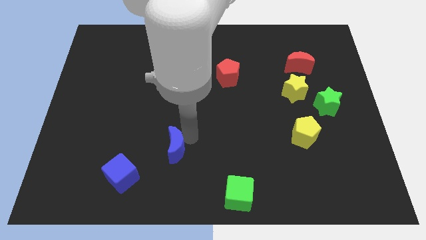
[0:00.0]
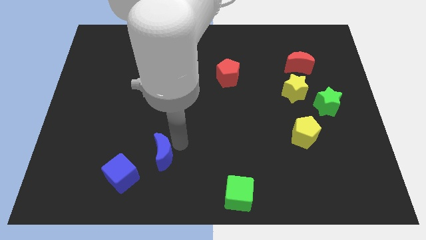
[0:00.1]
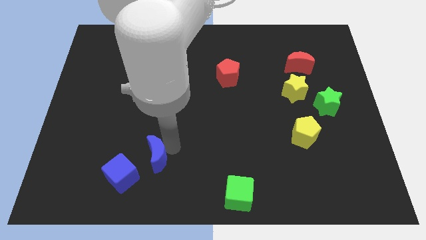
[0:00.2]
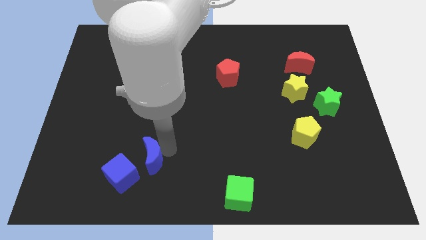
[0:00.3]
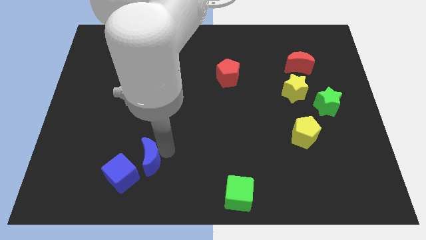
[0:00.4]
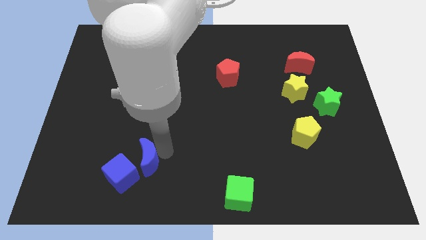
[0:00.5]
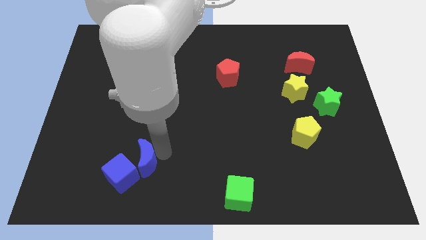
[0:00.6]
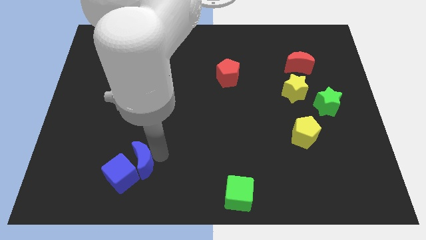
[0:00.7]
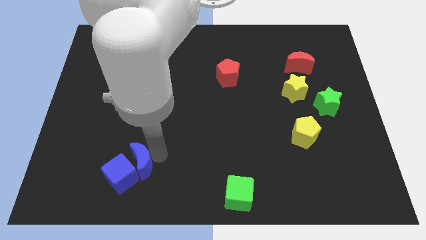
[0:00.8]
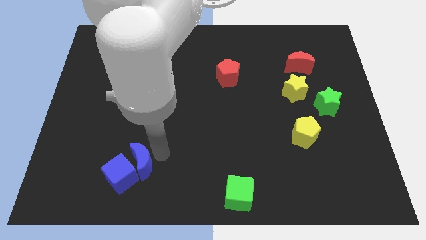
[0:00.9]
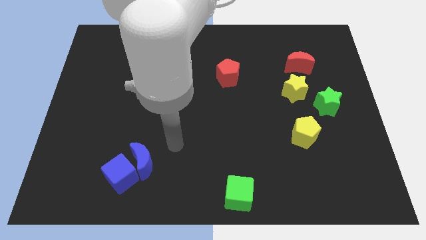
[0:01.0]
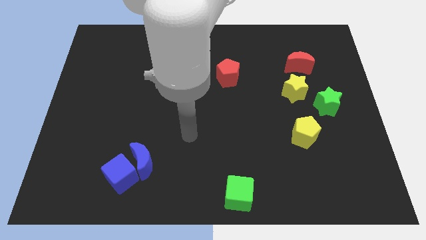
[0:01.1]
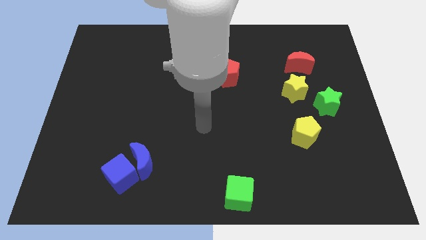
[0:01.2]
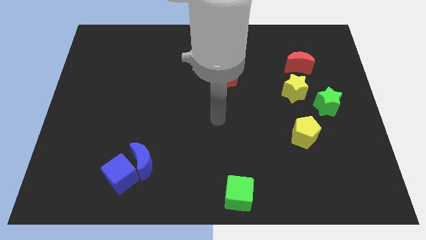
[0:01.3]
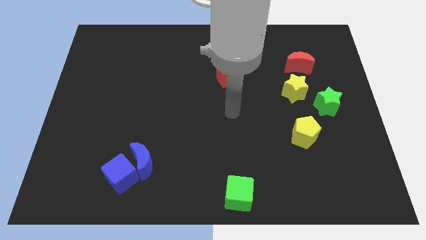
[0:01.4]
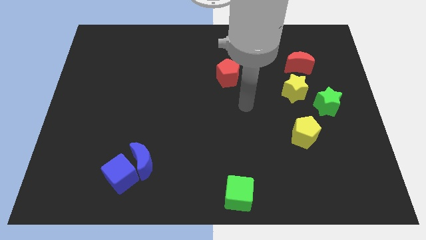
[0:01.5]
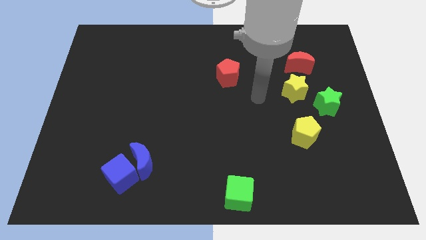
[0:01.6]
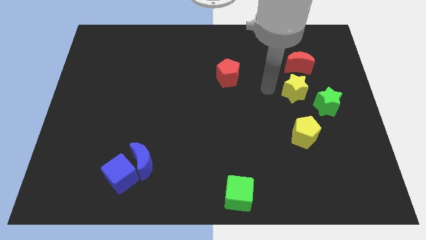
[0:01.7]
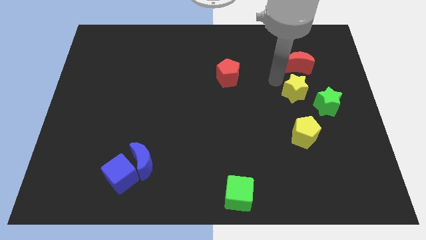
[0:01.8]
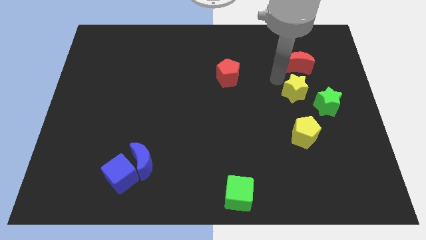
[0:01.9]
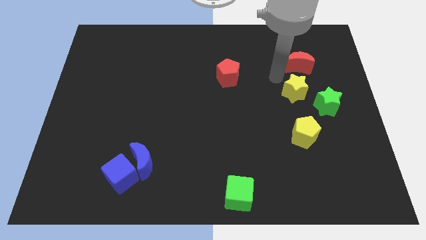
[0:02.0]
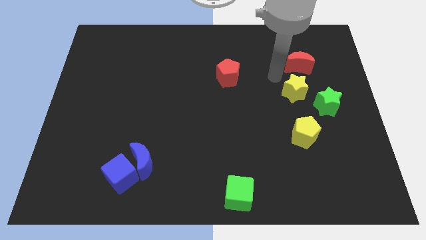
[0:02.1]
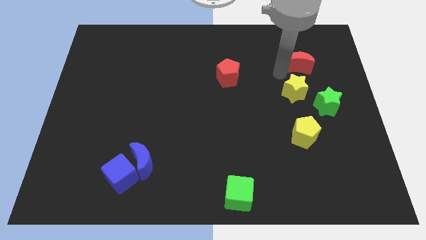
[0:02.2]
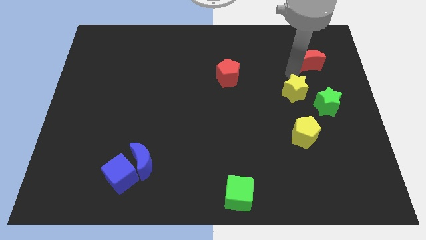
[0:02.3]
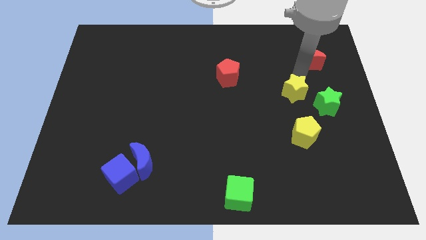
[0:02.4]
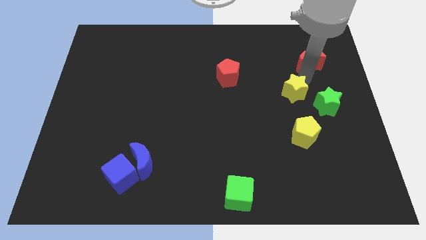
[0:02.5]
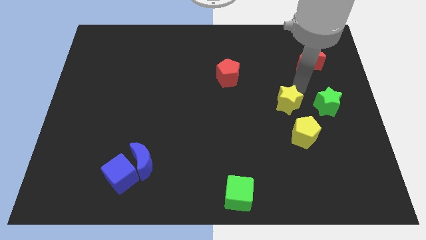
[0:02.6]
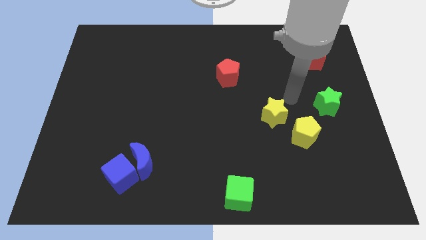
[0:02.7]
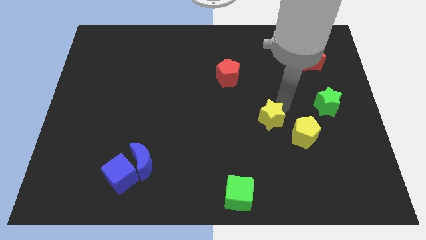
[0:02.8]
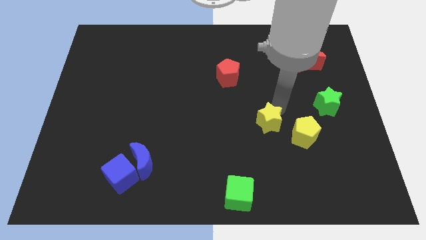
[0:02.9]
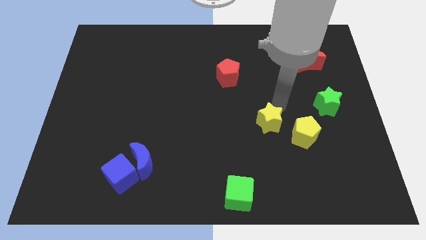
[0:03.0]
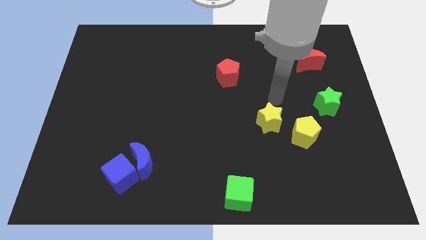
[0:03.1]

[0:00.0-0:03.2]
move the blue moon slightly to the right

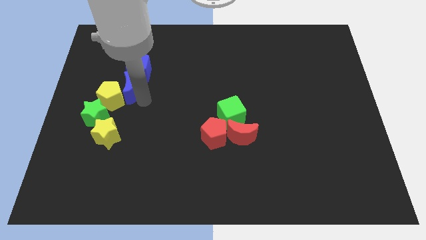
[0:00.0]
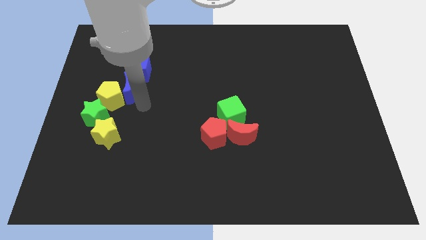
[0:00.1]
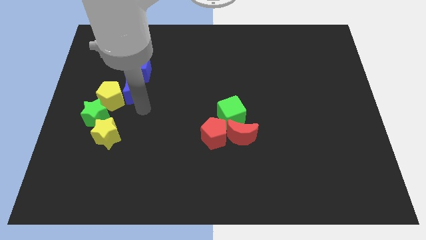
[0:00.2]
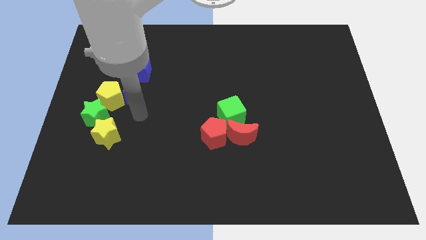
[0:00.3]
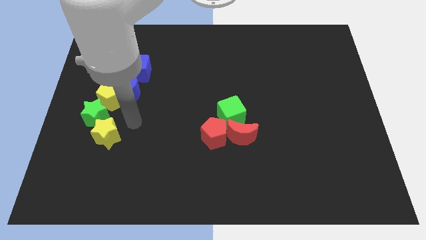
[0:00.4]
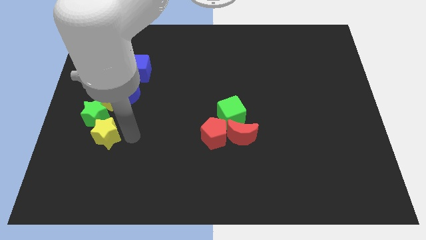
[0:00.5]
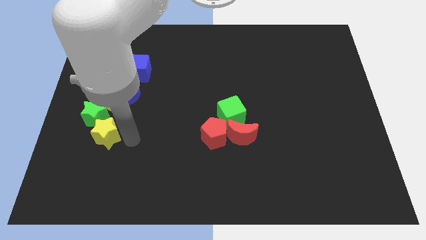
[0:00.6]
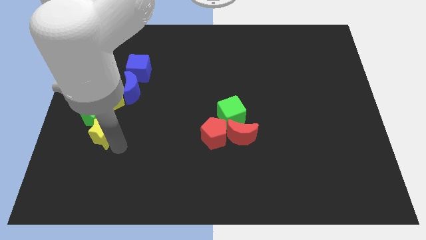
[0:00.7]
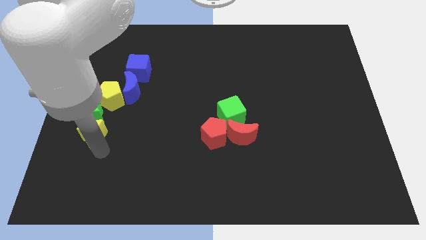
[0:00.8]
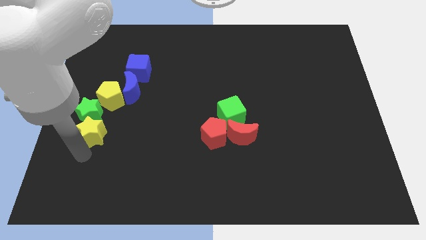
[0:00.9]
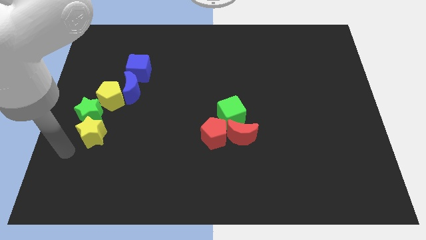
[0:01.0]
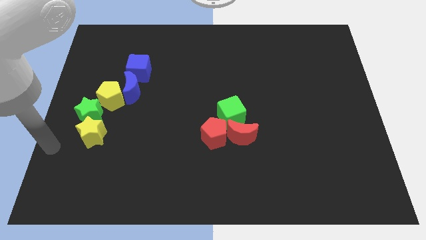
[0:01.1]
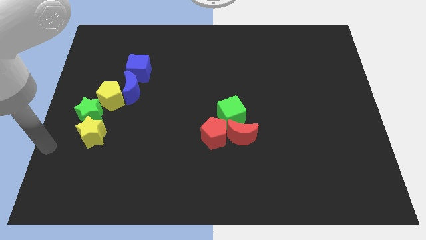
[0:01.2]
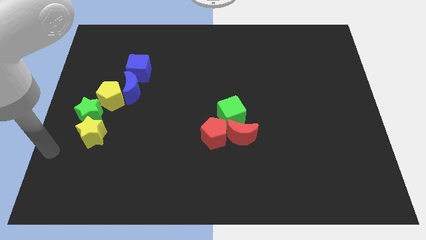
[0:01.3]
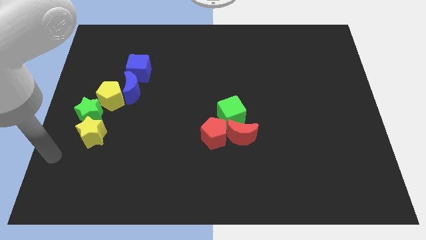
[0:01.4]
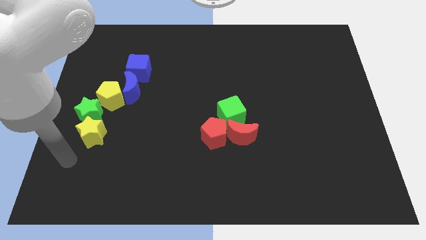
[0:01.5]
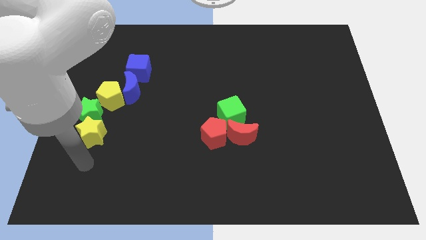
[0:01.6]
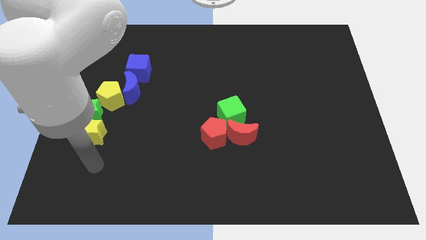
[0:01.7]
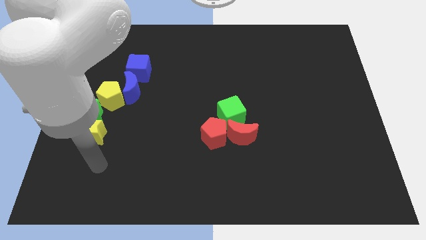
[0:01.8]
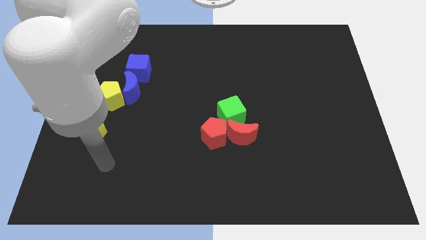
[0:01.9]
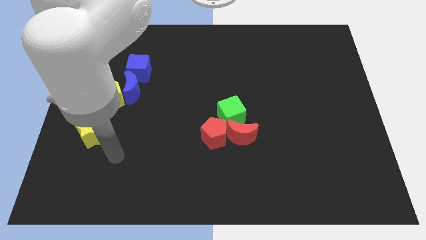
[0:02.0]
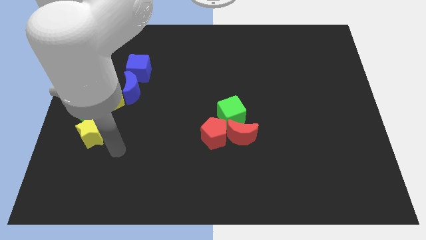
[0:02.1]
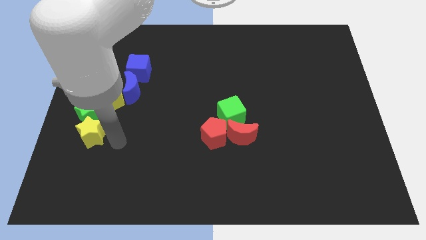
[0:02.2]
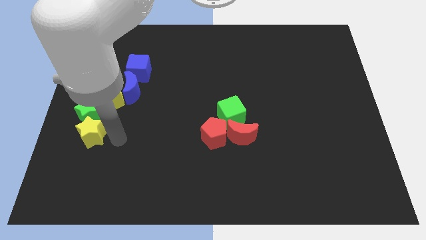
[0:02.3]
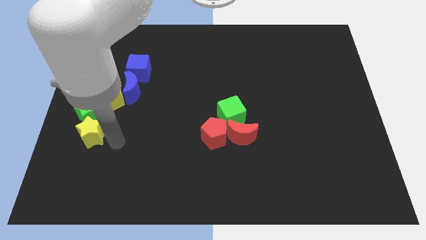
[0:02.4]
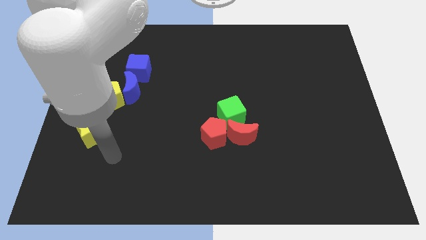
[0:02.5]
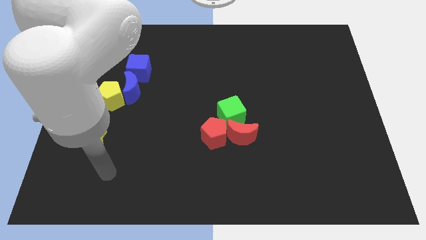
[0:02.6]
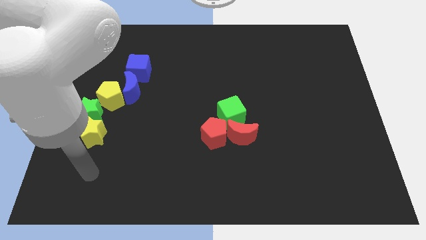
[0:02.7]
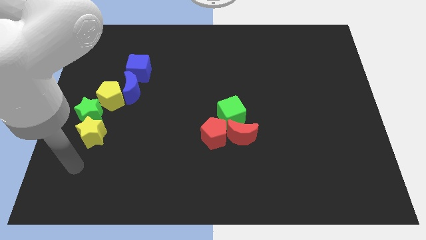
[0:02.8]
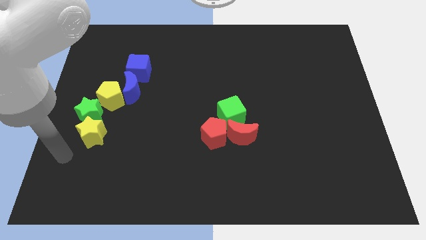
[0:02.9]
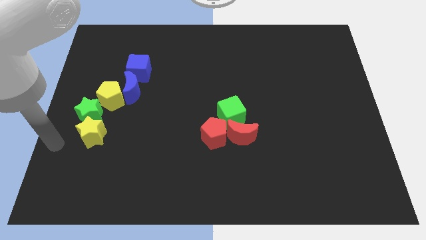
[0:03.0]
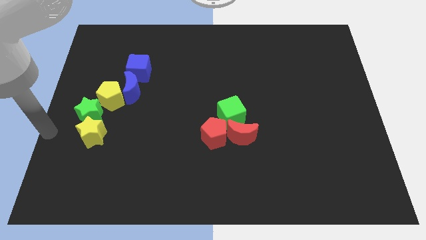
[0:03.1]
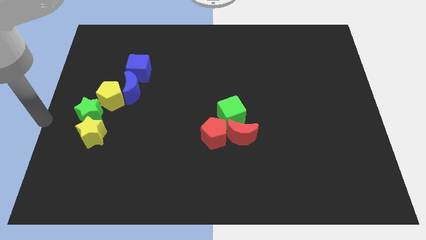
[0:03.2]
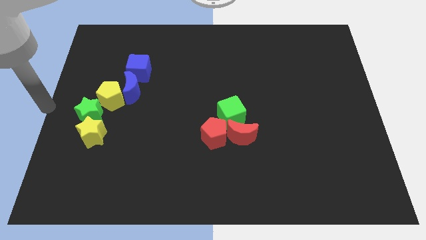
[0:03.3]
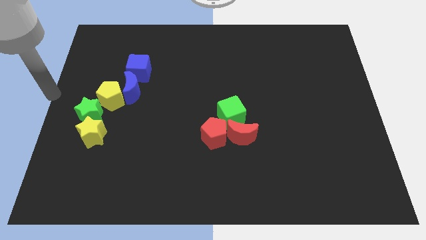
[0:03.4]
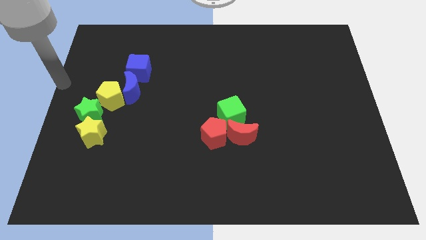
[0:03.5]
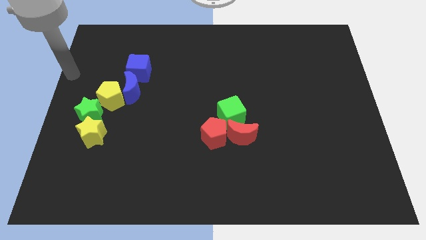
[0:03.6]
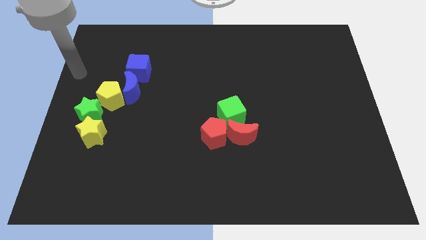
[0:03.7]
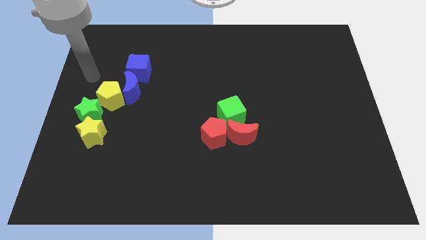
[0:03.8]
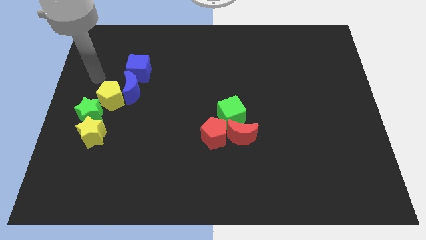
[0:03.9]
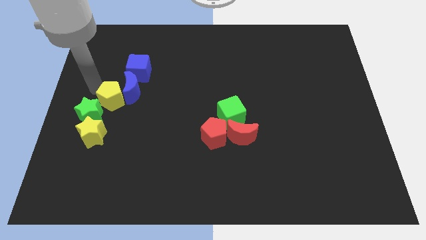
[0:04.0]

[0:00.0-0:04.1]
move your arm to the top left of the yellow pentagon

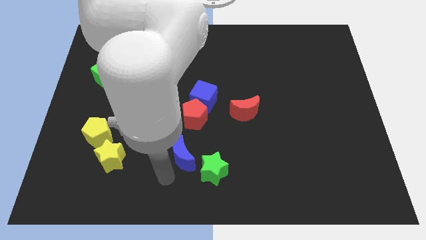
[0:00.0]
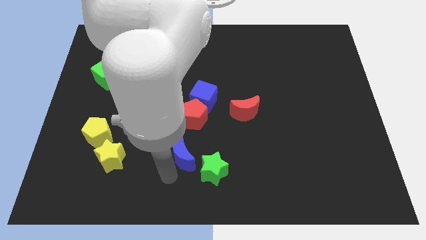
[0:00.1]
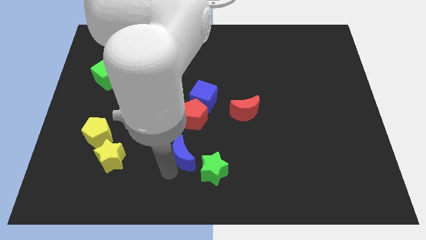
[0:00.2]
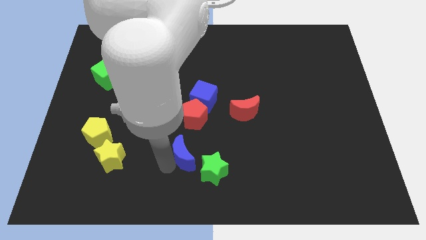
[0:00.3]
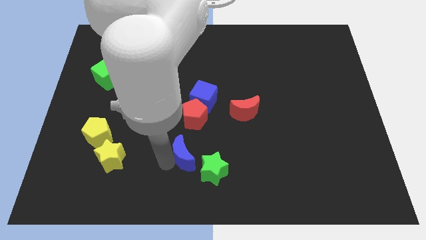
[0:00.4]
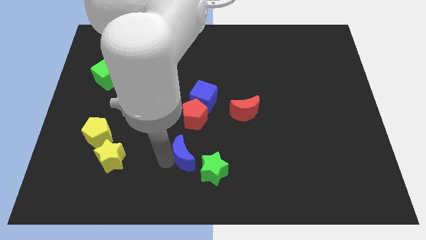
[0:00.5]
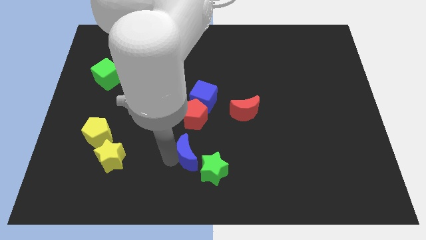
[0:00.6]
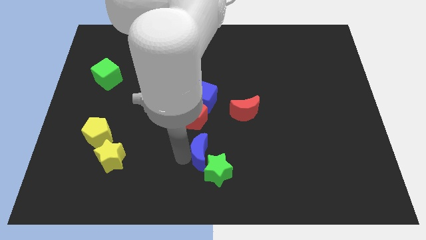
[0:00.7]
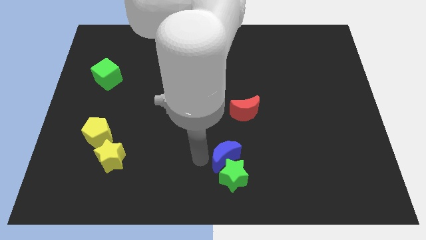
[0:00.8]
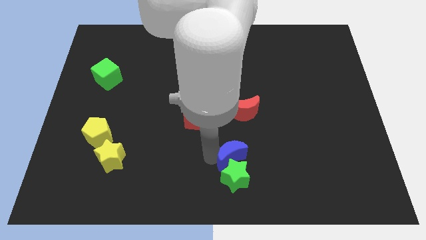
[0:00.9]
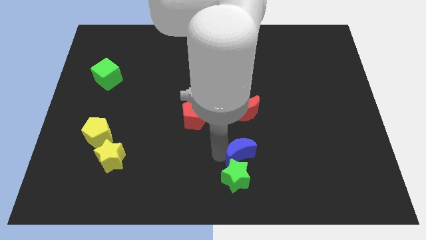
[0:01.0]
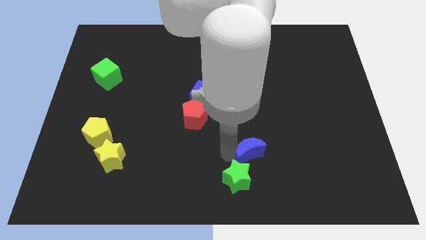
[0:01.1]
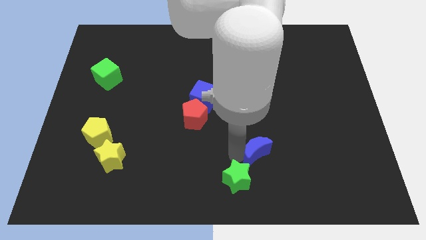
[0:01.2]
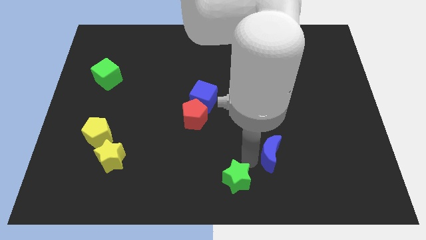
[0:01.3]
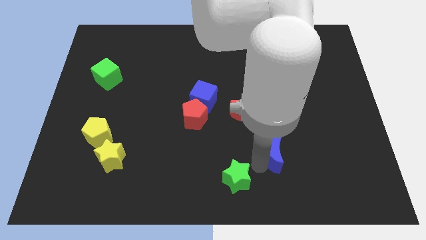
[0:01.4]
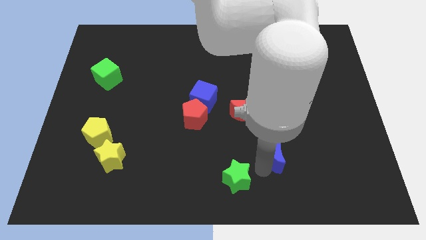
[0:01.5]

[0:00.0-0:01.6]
push the blue moon to the right side

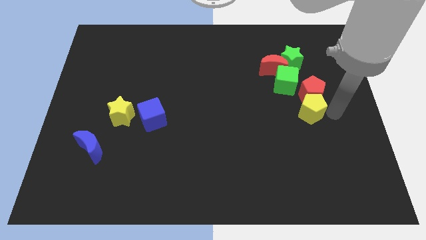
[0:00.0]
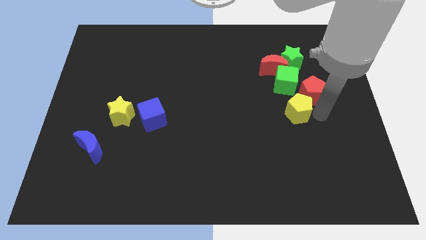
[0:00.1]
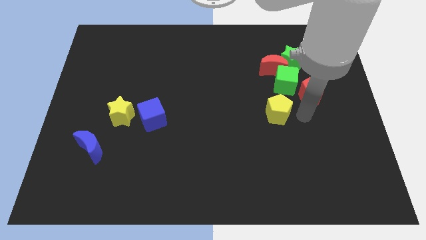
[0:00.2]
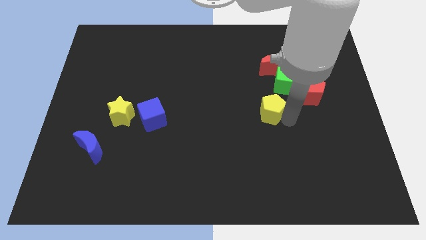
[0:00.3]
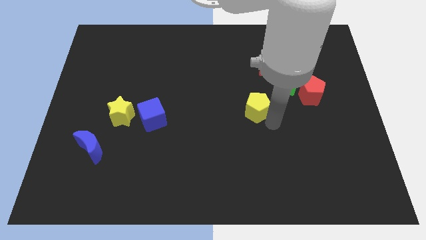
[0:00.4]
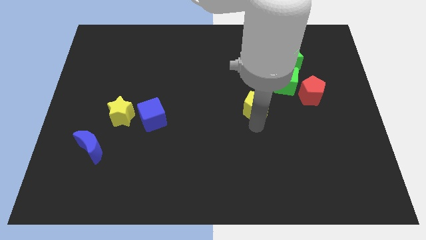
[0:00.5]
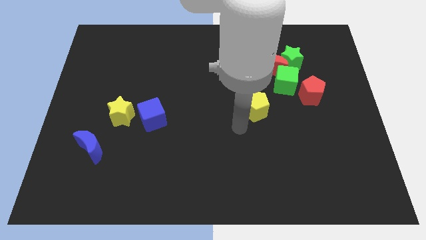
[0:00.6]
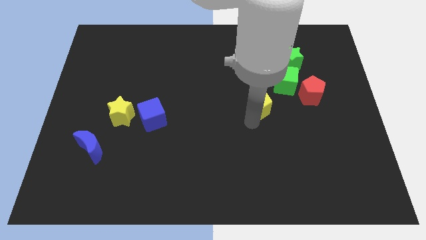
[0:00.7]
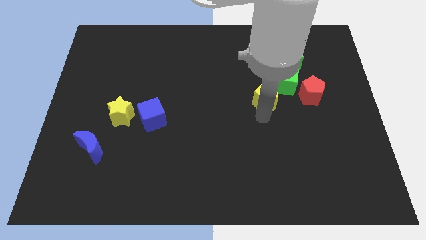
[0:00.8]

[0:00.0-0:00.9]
move the yellow pentagon to the left side
